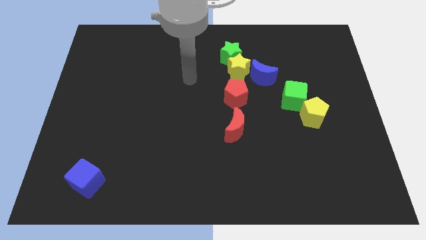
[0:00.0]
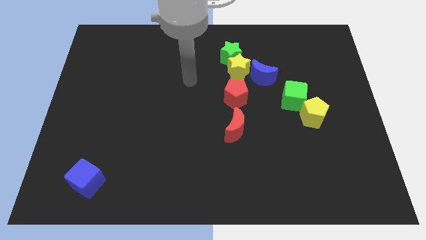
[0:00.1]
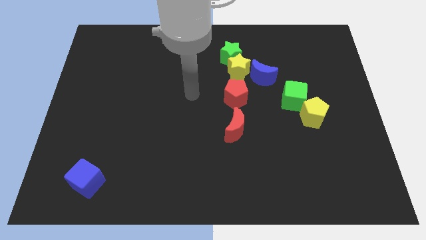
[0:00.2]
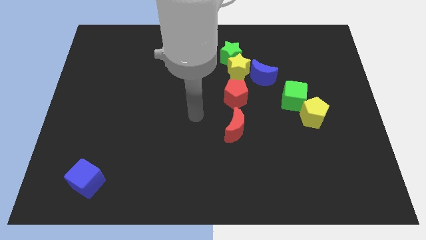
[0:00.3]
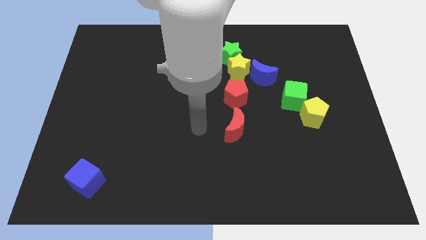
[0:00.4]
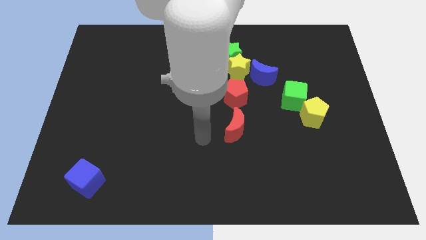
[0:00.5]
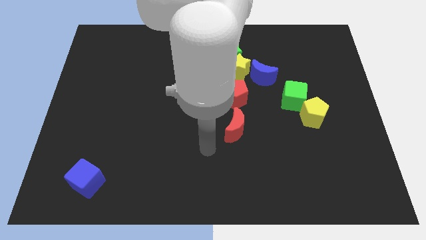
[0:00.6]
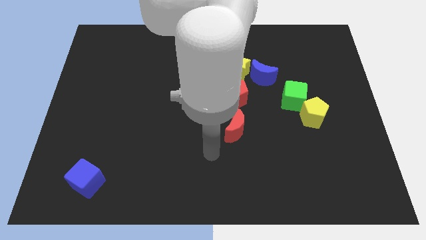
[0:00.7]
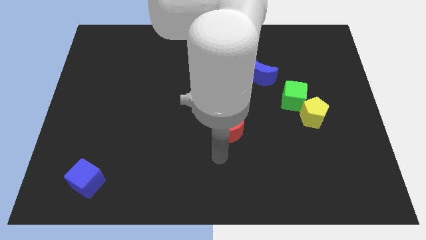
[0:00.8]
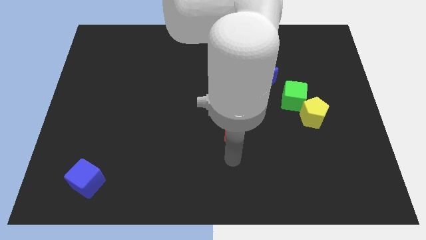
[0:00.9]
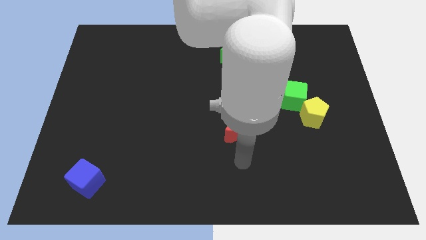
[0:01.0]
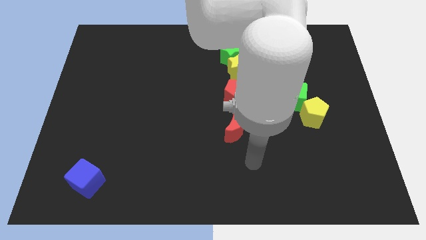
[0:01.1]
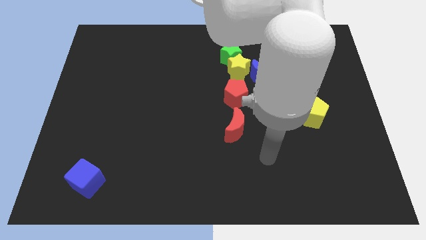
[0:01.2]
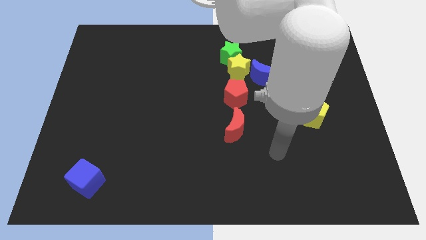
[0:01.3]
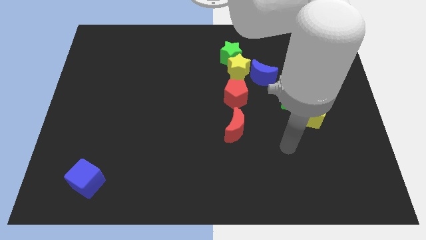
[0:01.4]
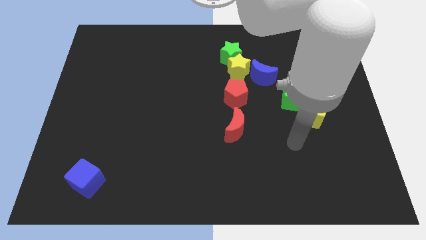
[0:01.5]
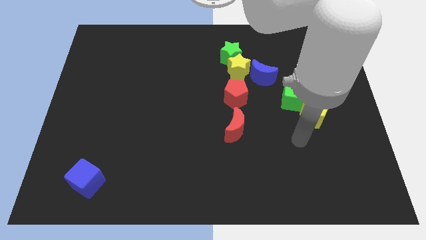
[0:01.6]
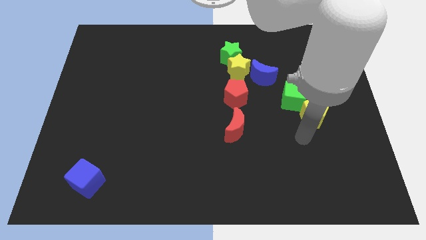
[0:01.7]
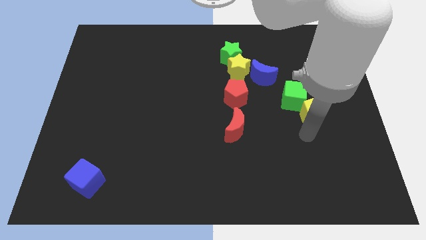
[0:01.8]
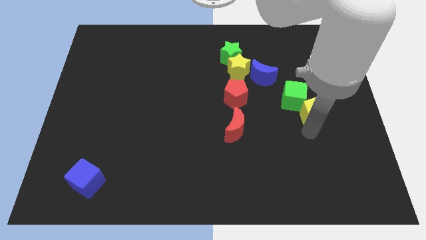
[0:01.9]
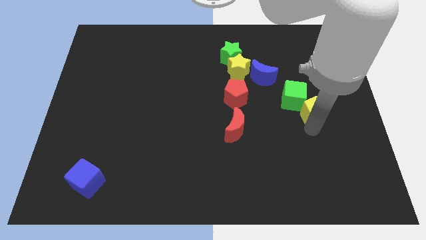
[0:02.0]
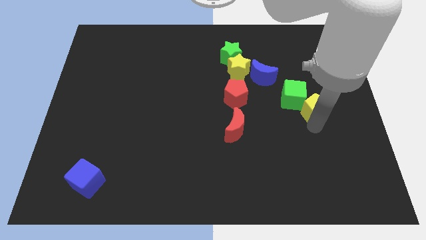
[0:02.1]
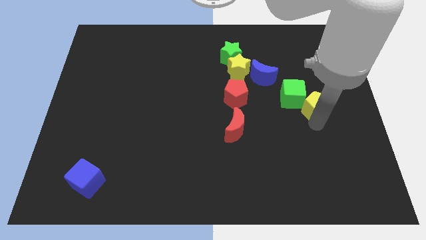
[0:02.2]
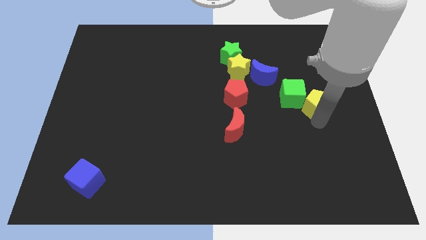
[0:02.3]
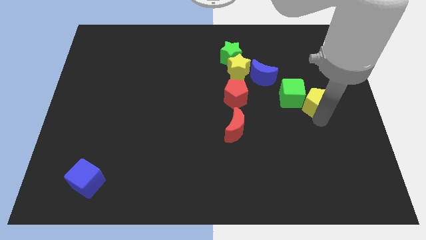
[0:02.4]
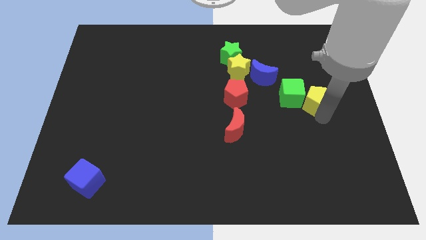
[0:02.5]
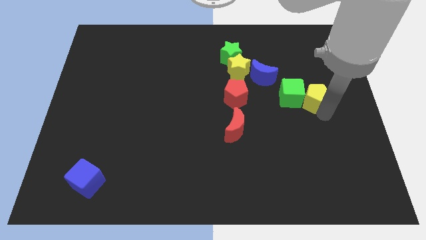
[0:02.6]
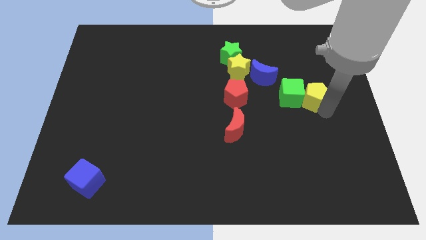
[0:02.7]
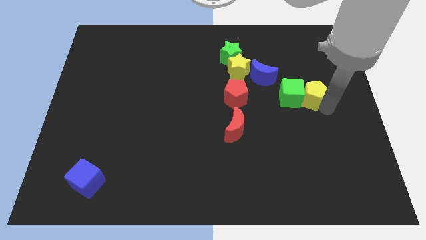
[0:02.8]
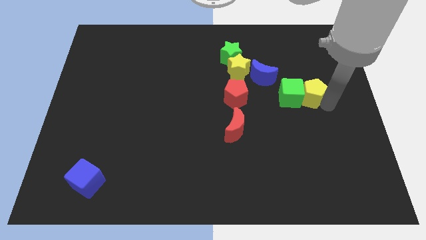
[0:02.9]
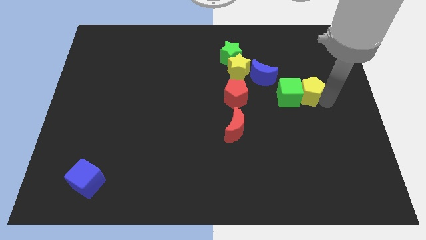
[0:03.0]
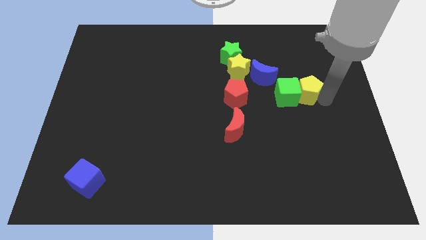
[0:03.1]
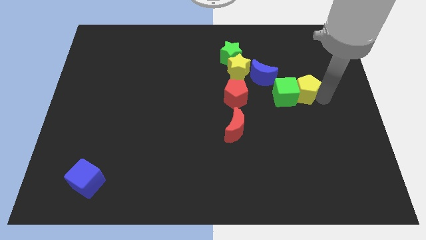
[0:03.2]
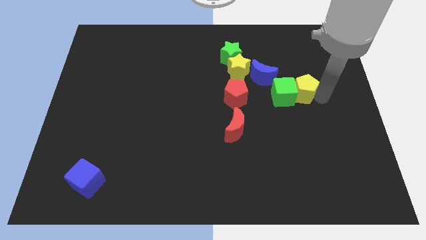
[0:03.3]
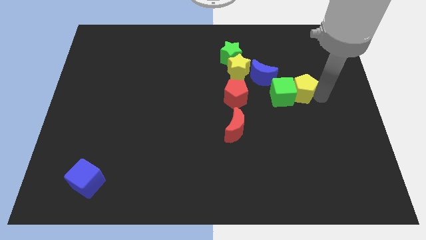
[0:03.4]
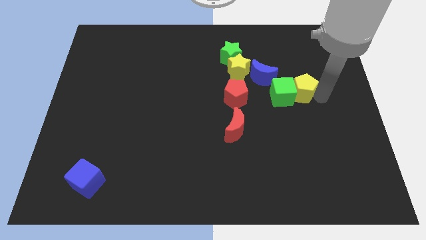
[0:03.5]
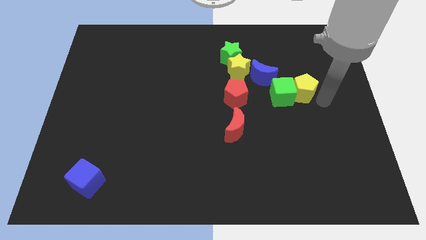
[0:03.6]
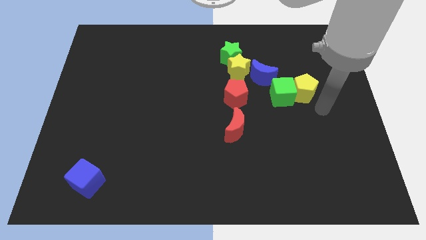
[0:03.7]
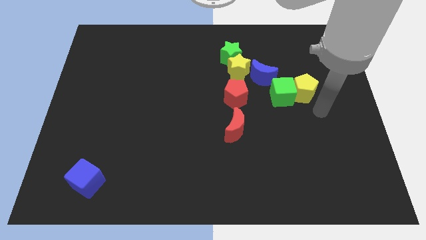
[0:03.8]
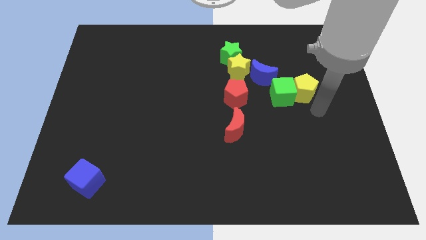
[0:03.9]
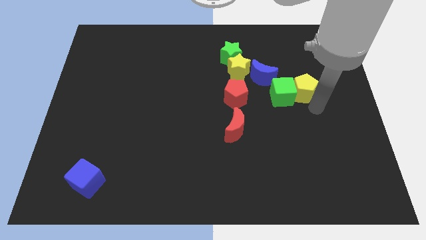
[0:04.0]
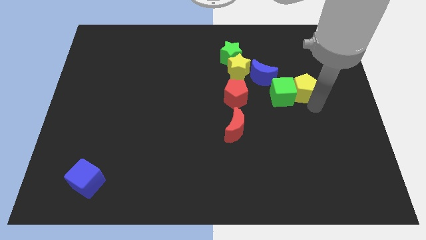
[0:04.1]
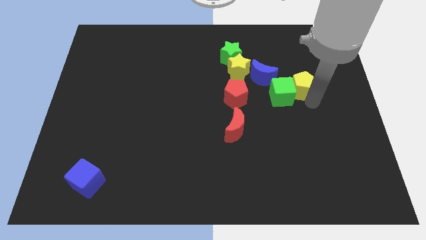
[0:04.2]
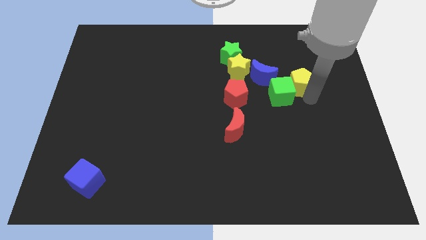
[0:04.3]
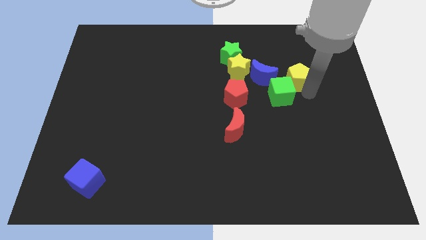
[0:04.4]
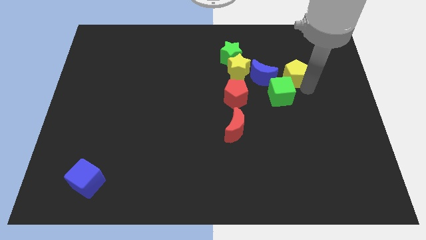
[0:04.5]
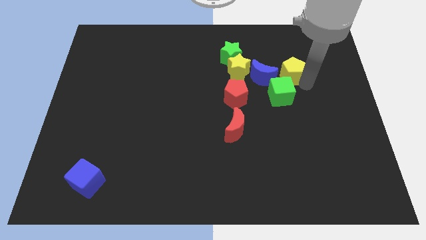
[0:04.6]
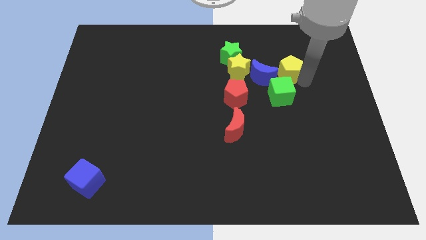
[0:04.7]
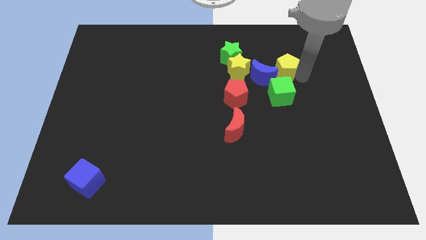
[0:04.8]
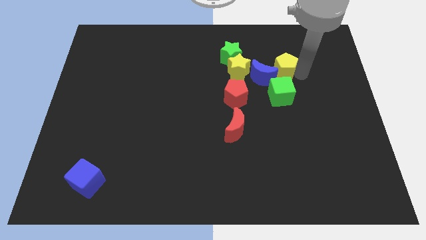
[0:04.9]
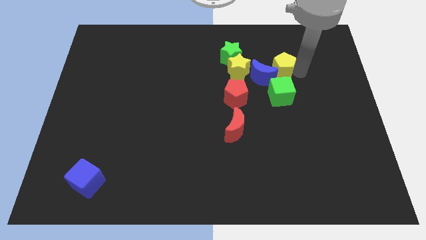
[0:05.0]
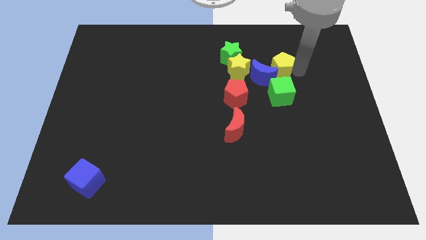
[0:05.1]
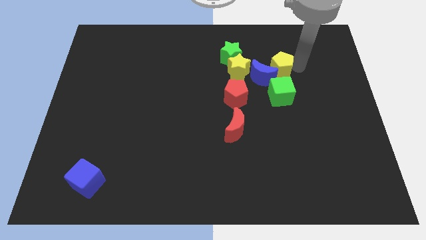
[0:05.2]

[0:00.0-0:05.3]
put the yellow pentagon to the blue moon

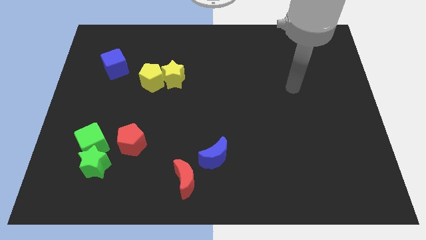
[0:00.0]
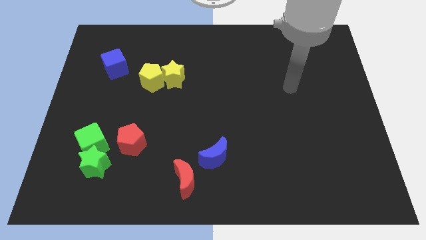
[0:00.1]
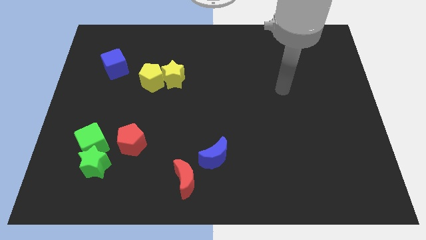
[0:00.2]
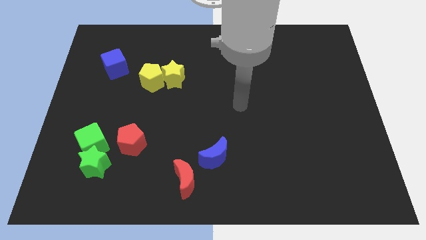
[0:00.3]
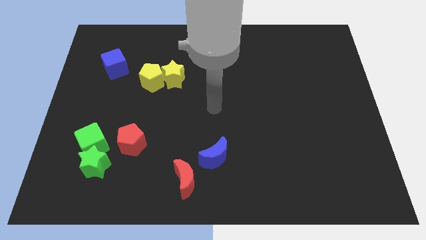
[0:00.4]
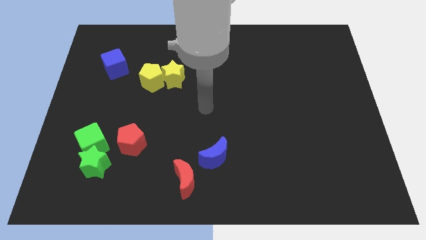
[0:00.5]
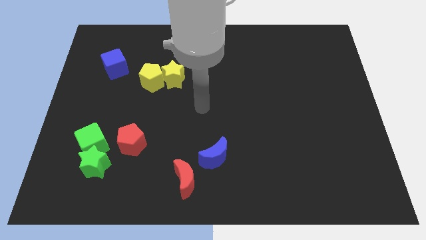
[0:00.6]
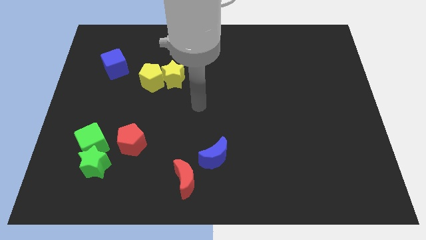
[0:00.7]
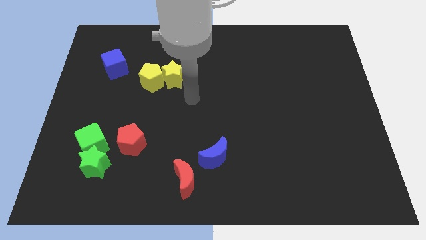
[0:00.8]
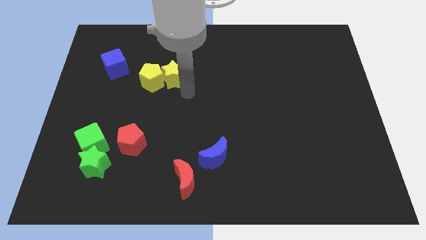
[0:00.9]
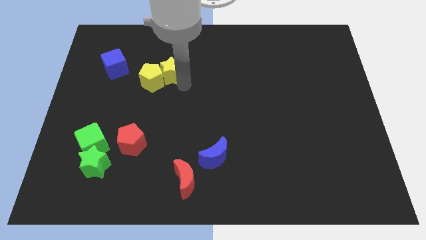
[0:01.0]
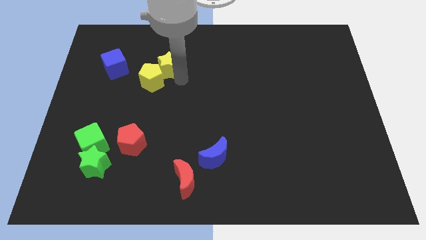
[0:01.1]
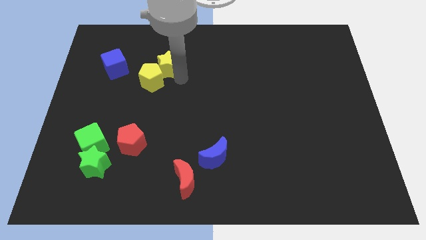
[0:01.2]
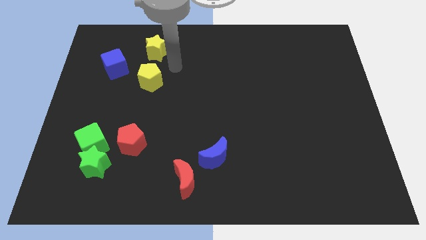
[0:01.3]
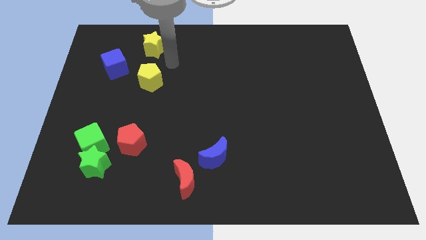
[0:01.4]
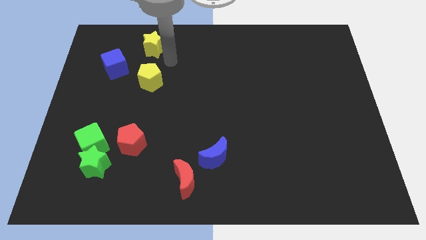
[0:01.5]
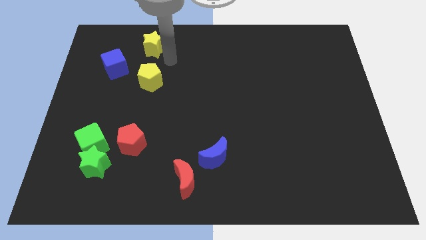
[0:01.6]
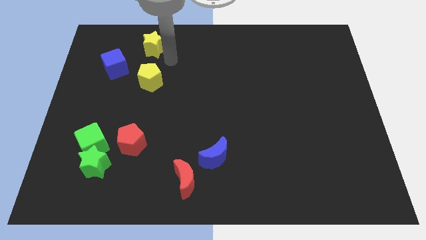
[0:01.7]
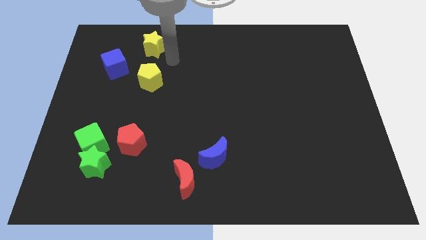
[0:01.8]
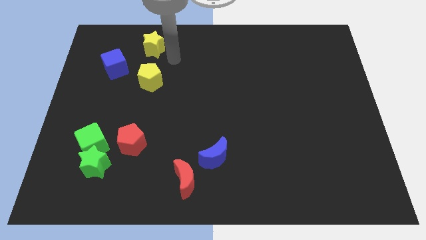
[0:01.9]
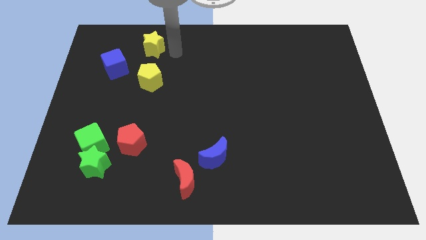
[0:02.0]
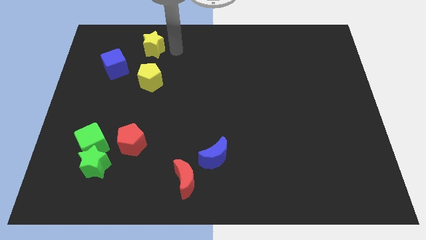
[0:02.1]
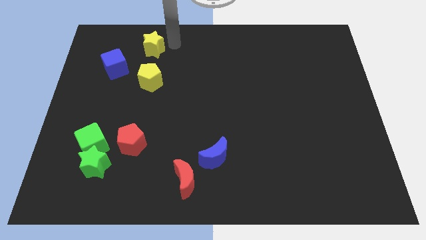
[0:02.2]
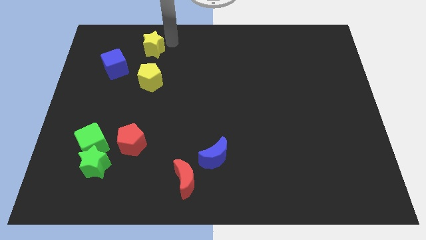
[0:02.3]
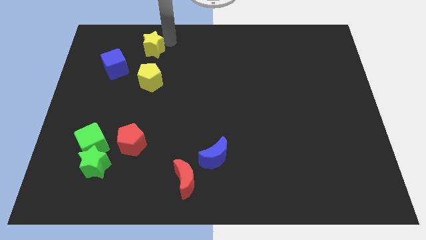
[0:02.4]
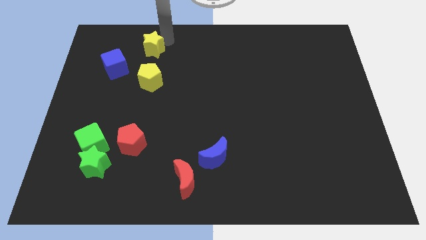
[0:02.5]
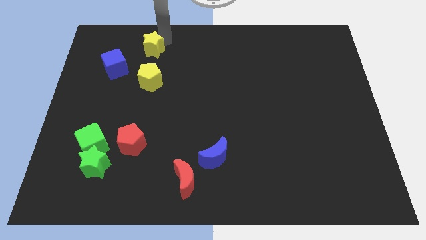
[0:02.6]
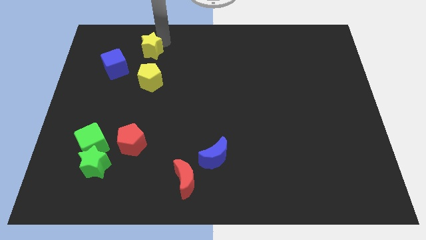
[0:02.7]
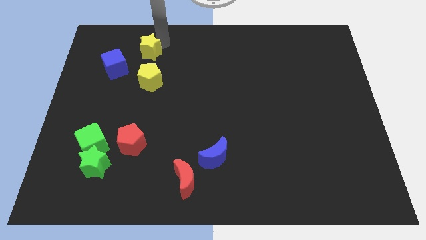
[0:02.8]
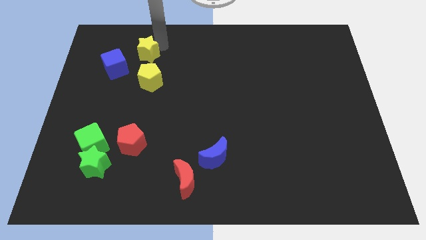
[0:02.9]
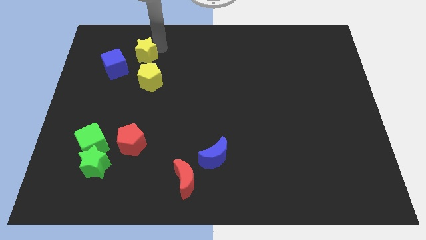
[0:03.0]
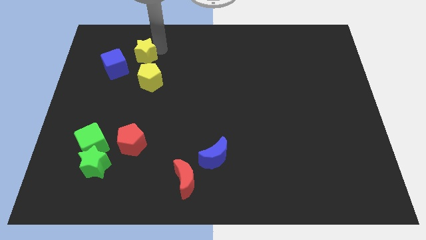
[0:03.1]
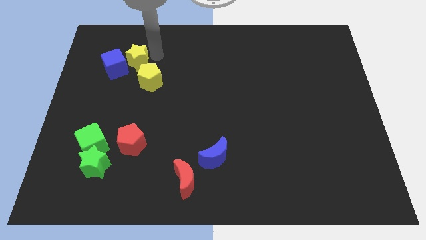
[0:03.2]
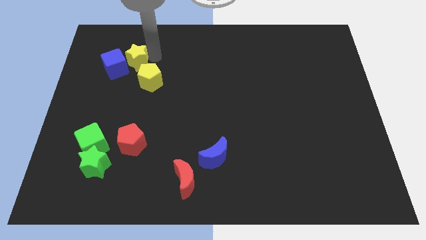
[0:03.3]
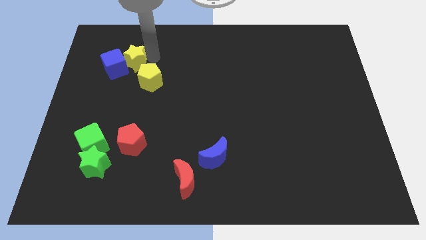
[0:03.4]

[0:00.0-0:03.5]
slide the yellow star towards the blue cube
